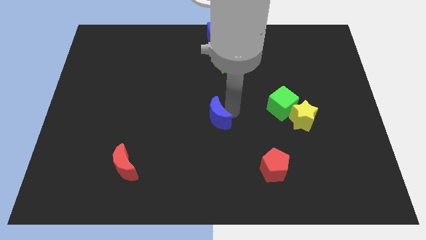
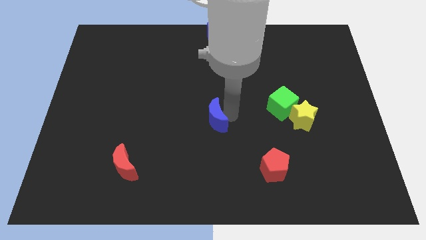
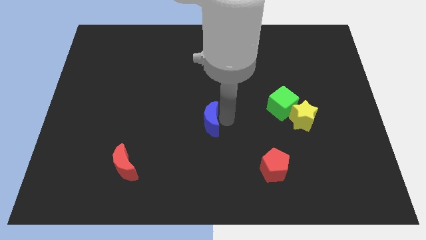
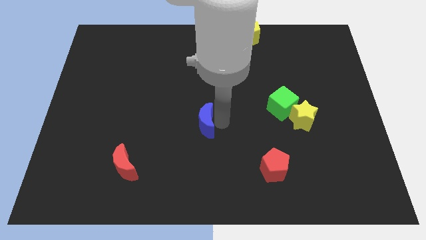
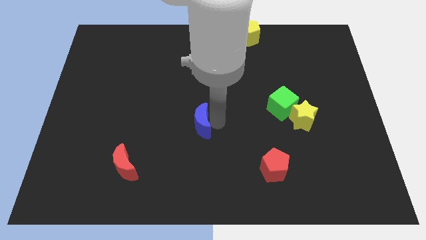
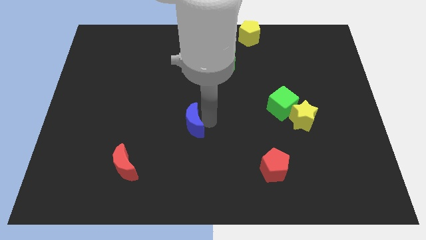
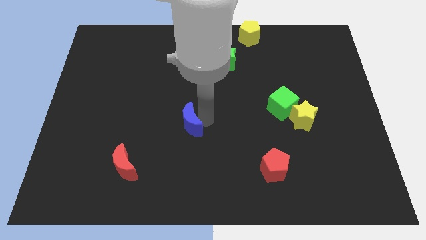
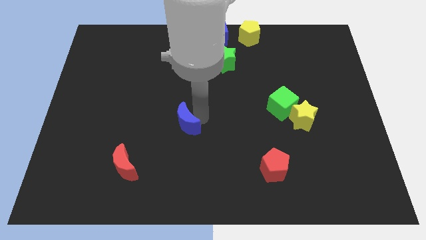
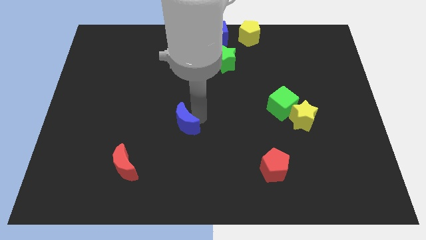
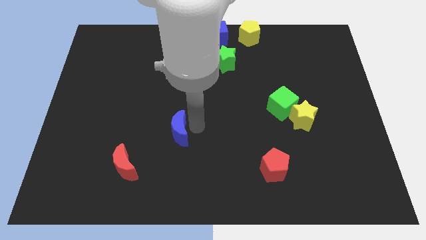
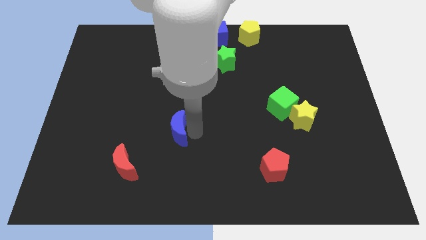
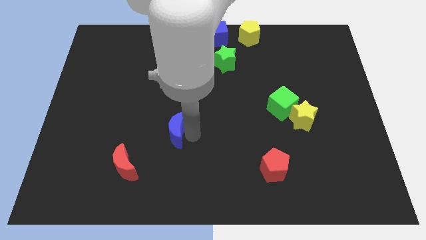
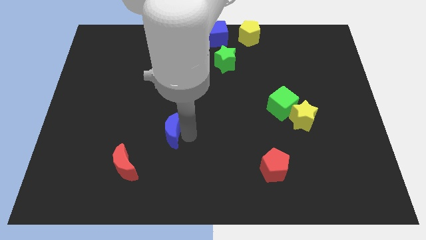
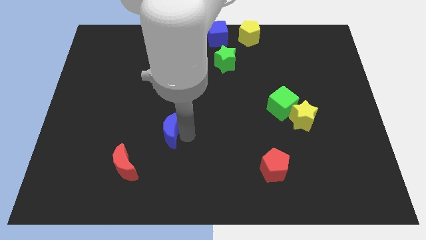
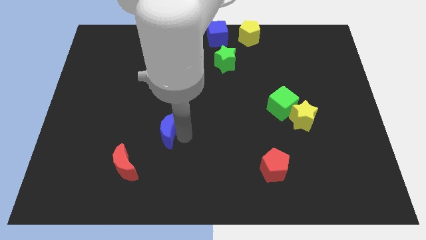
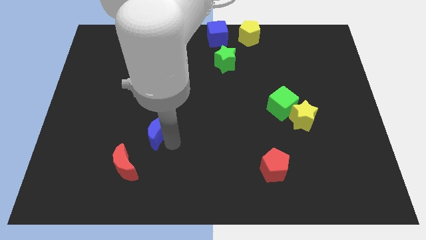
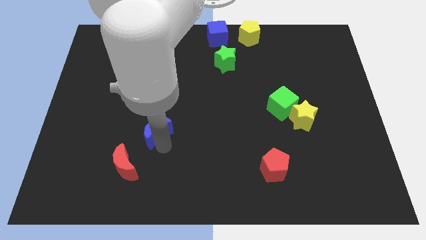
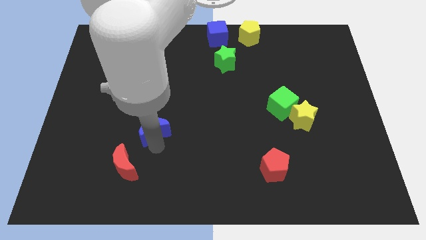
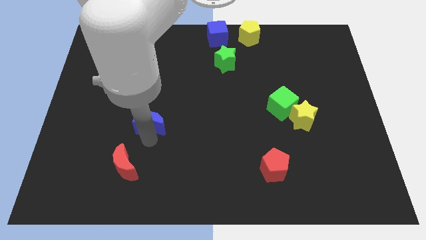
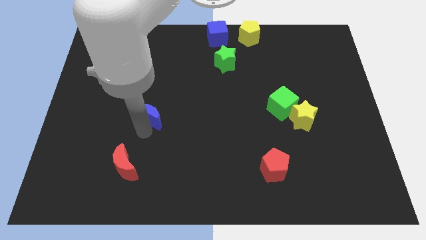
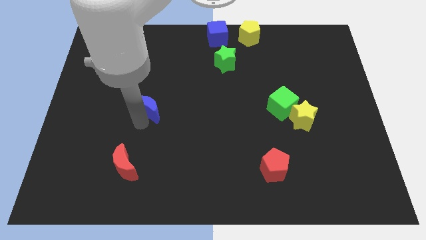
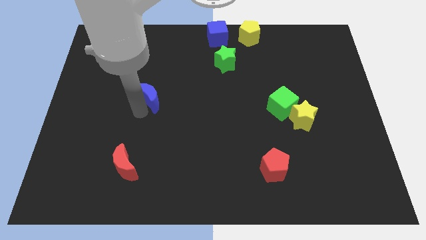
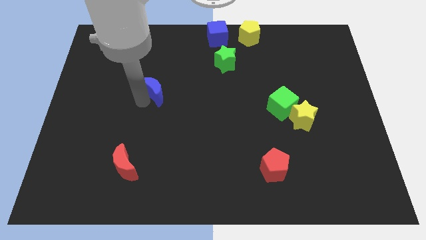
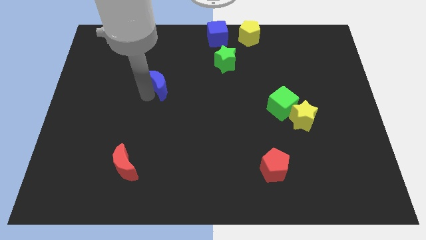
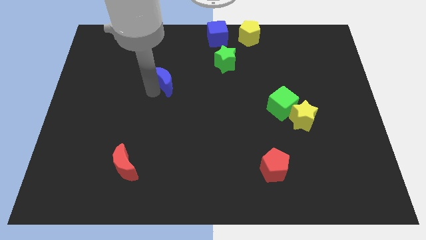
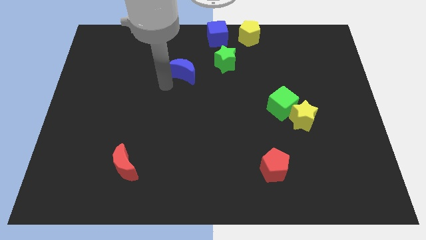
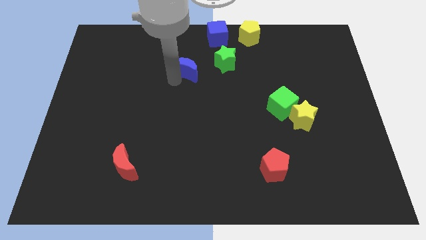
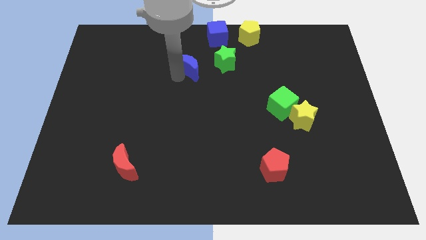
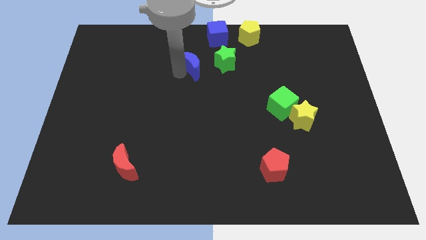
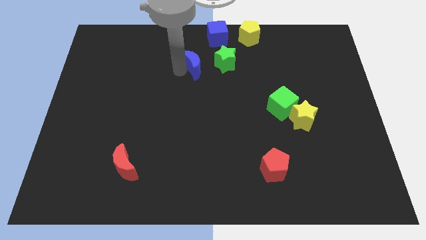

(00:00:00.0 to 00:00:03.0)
move the blue crescent to the left of the green star

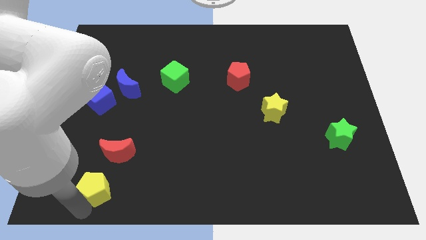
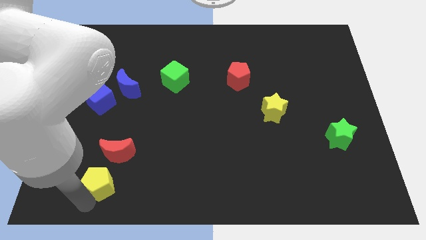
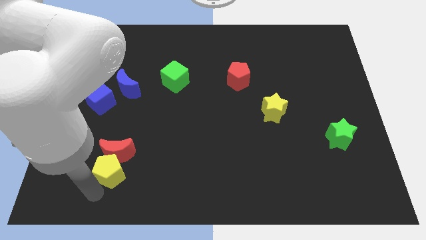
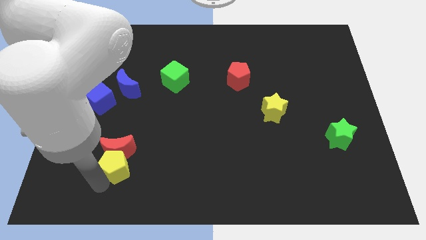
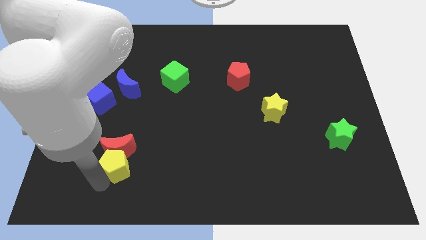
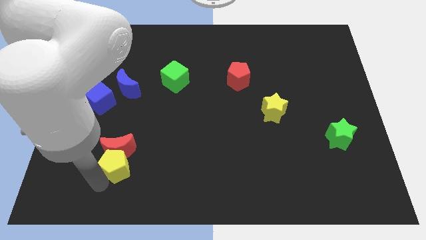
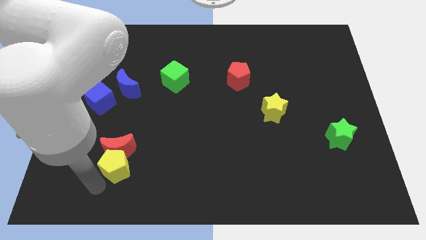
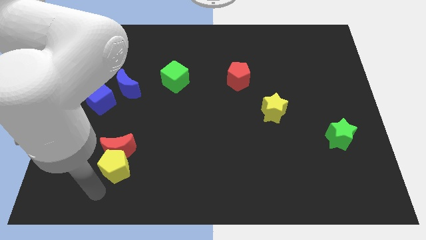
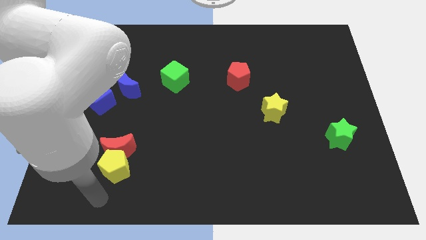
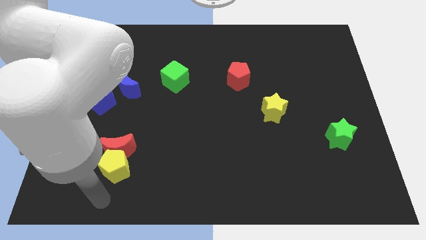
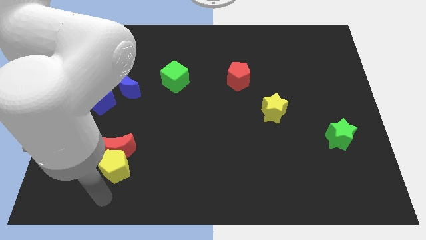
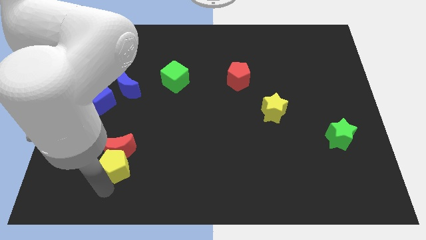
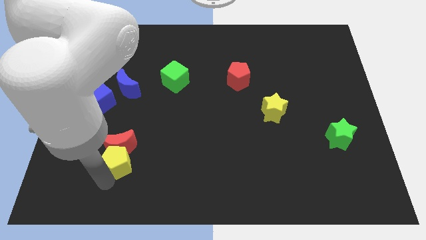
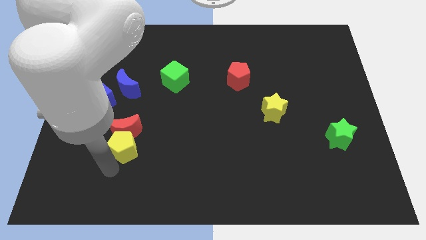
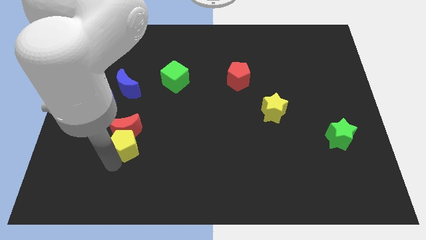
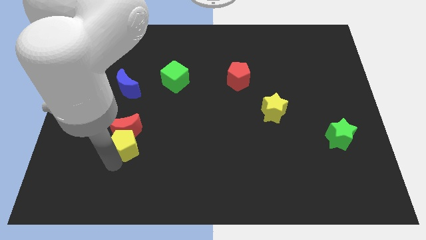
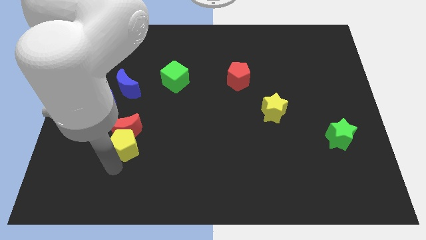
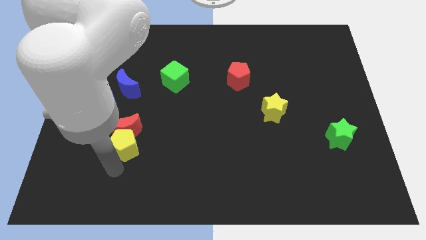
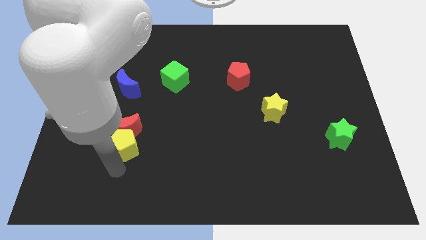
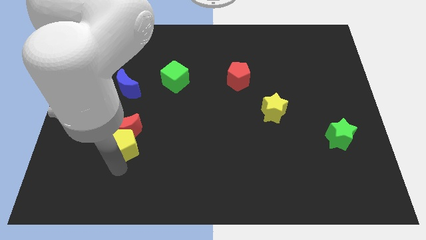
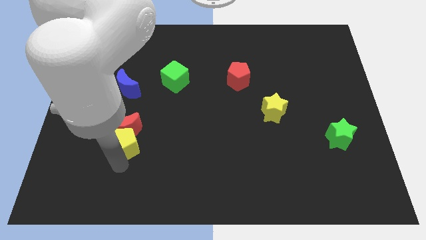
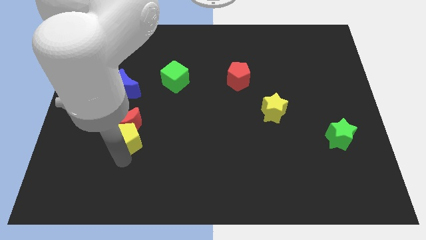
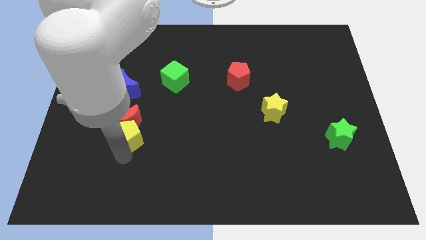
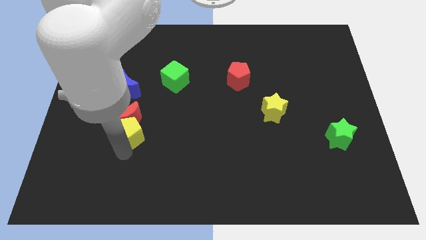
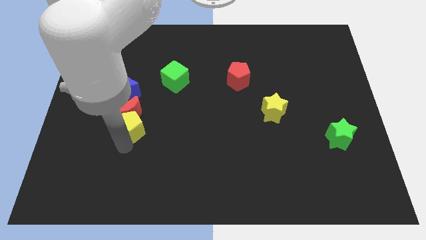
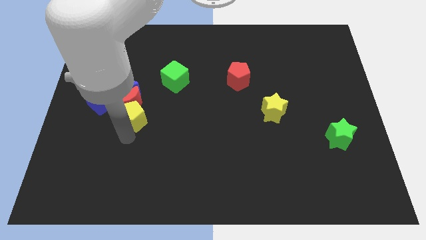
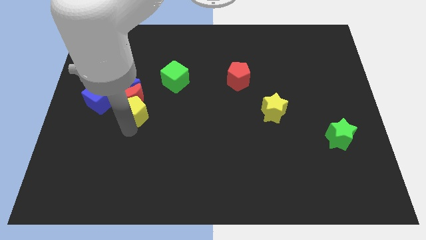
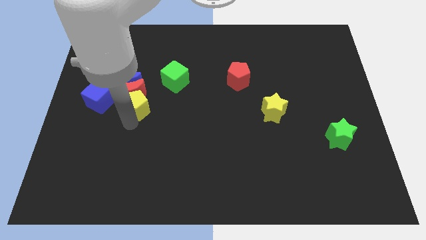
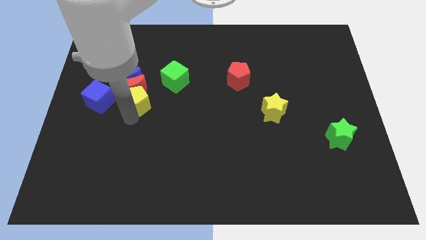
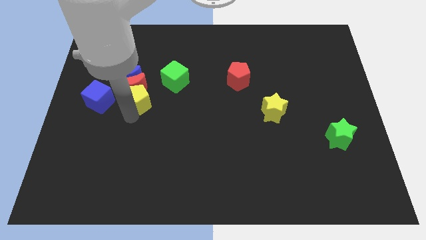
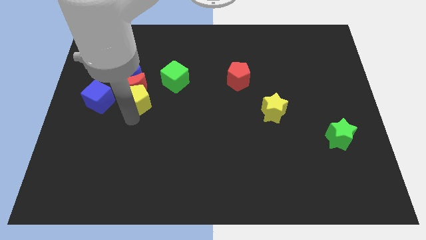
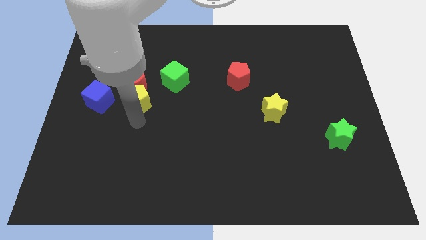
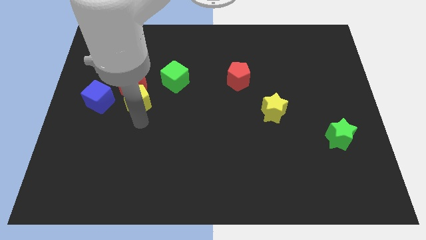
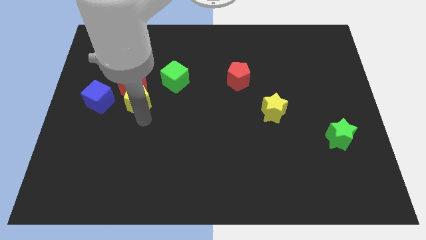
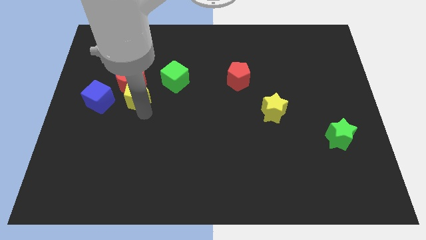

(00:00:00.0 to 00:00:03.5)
push the red crescent and yellow pentagon into the blue crescent

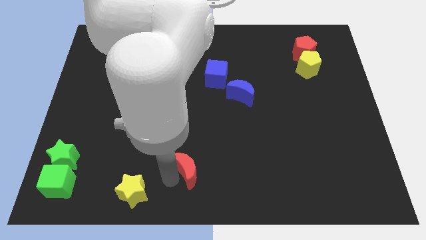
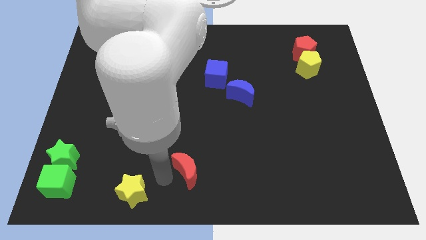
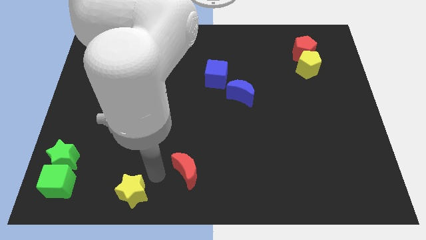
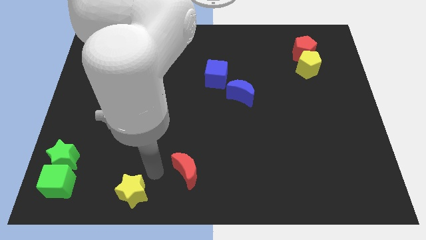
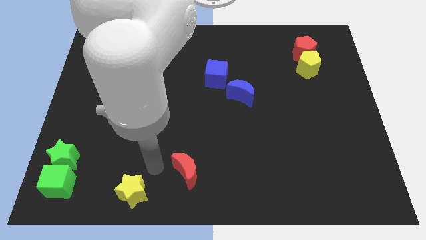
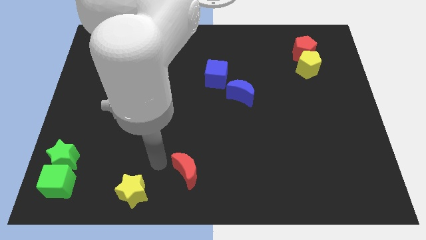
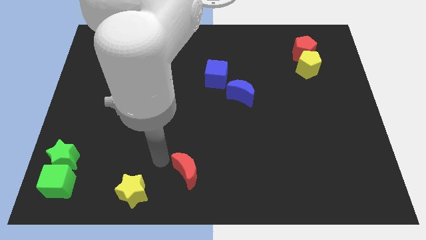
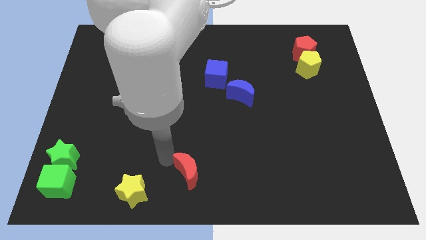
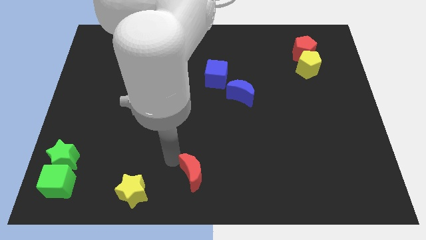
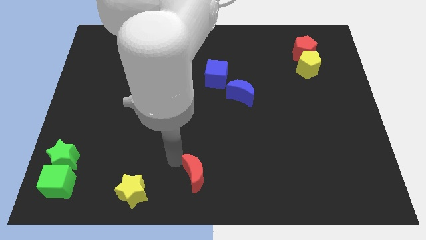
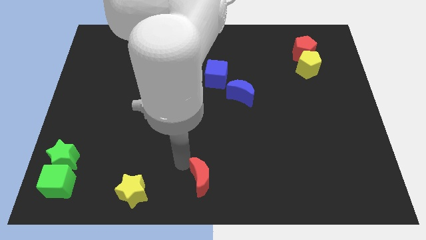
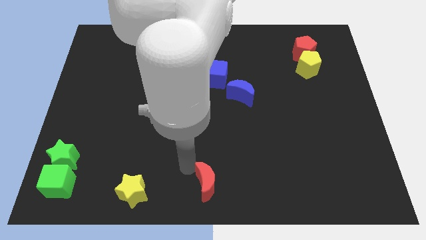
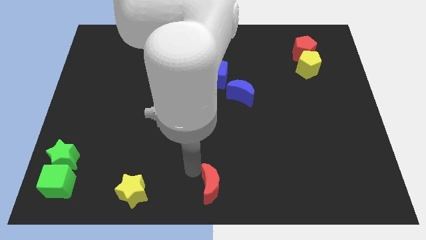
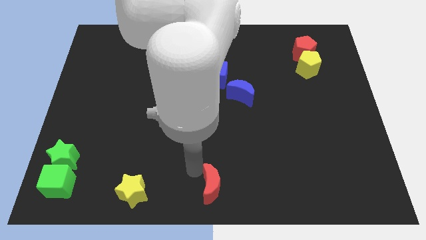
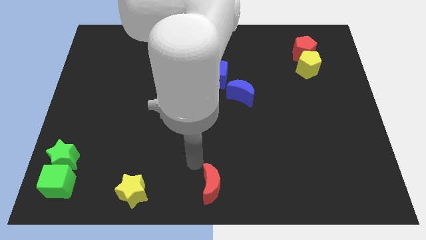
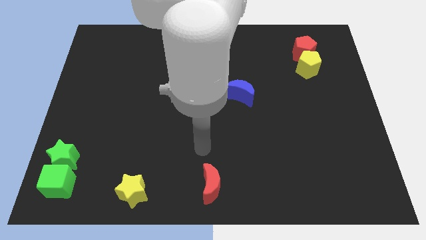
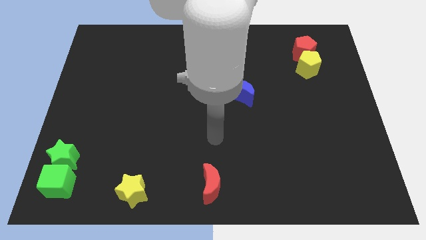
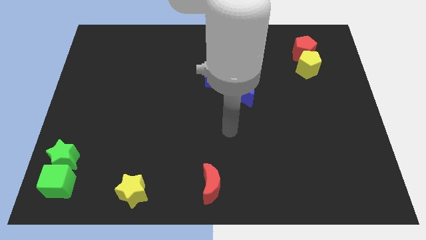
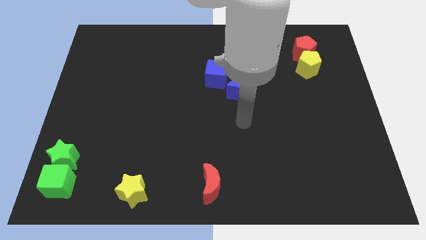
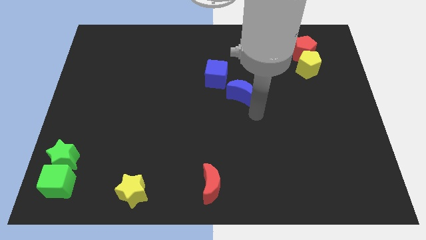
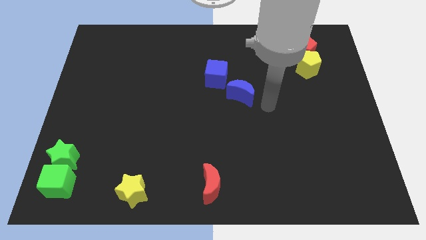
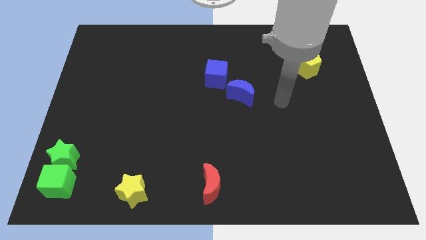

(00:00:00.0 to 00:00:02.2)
place the red moon diagonally at the bottom side of the blue cube

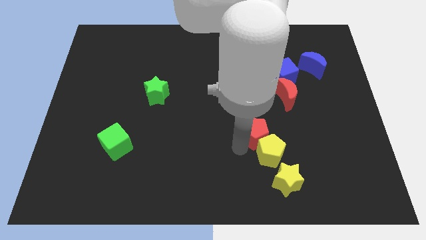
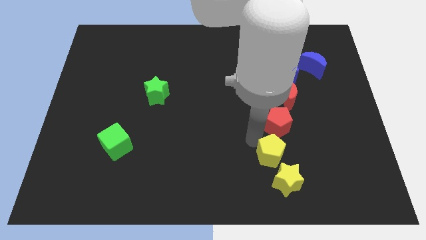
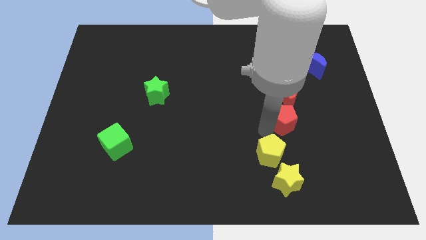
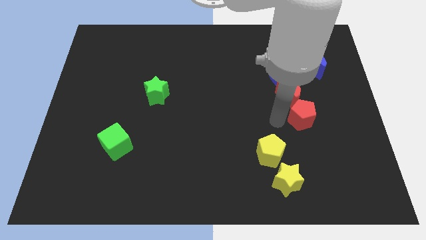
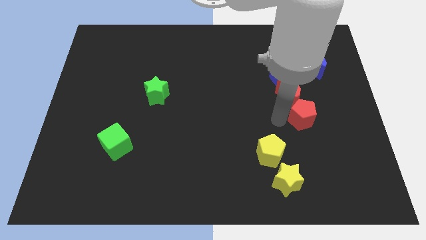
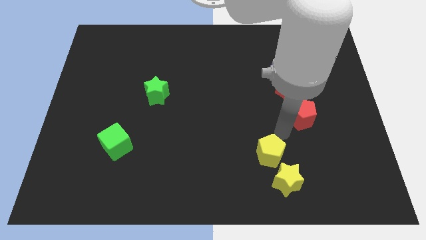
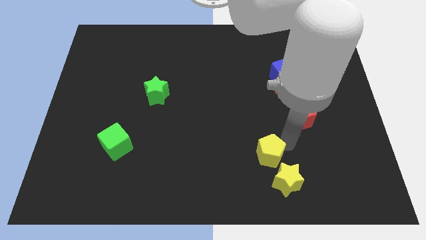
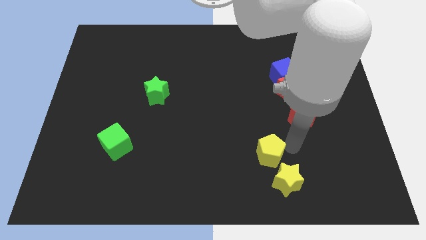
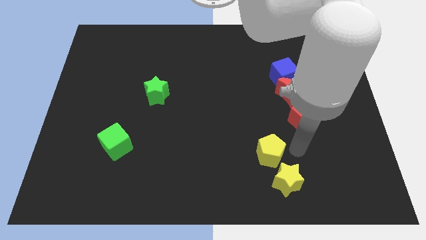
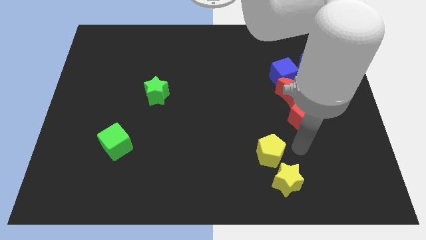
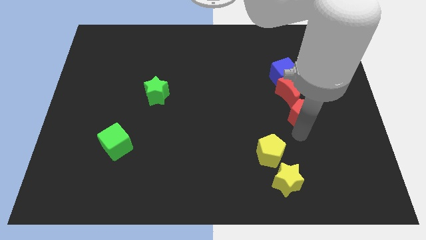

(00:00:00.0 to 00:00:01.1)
separate the red pentagon from the yellow pentagon
